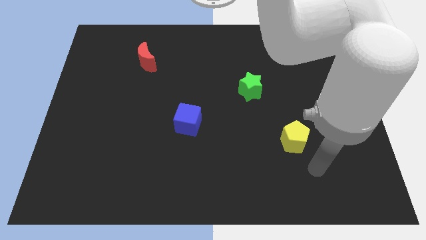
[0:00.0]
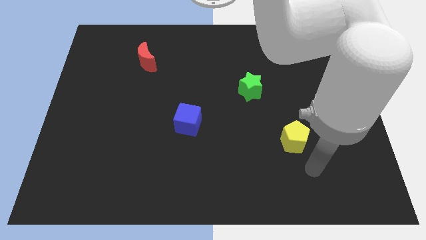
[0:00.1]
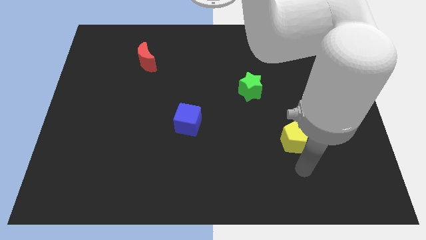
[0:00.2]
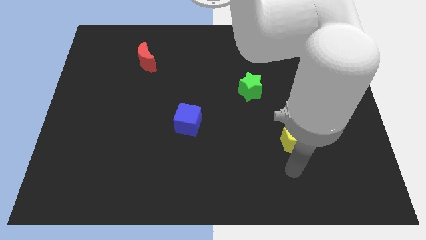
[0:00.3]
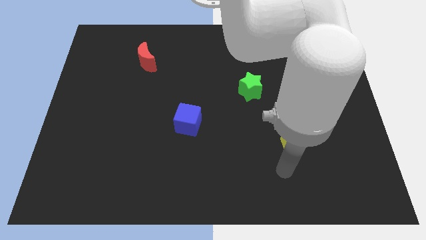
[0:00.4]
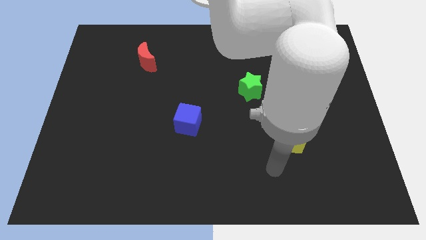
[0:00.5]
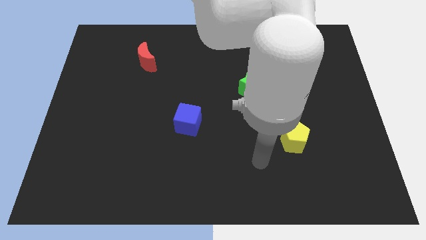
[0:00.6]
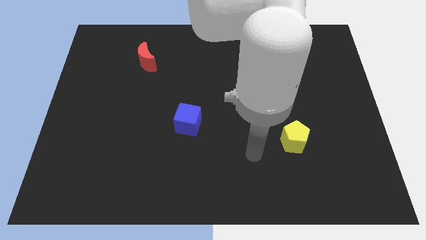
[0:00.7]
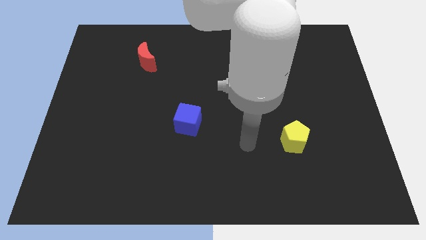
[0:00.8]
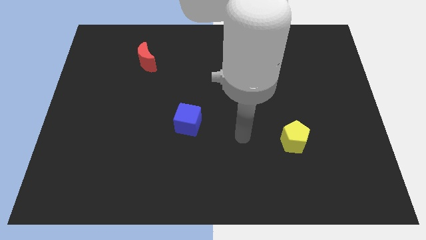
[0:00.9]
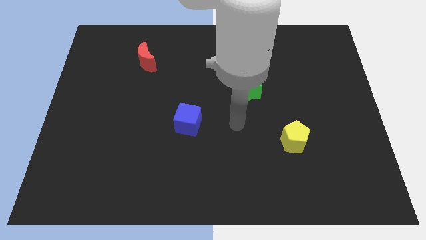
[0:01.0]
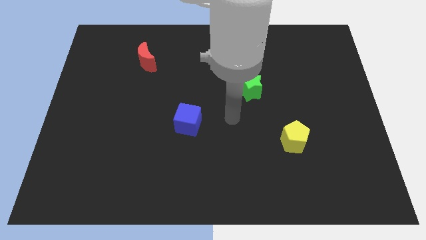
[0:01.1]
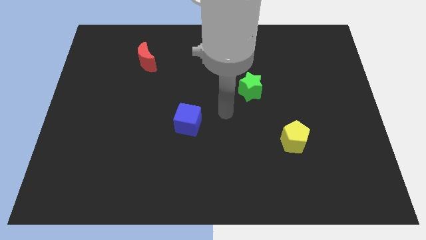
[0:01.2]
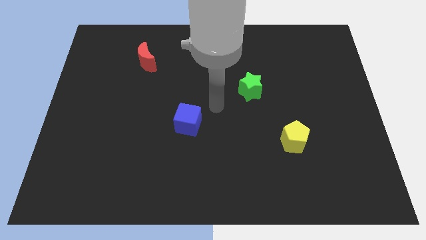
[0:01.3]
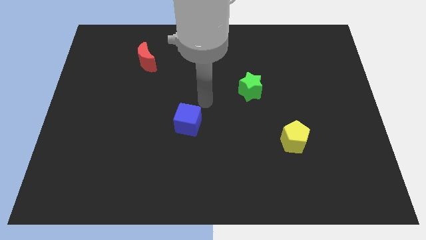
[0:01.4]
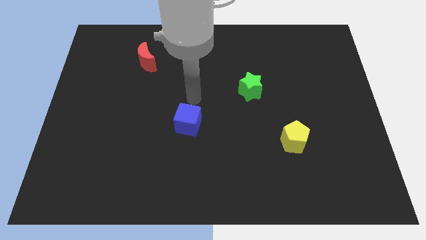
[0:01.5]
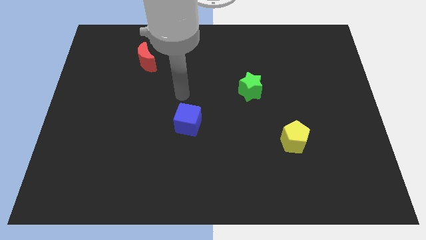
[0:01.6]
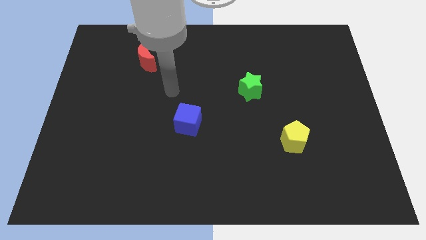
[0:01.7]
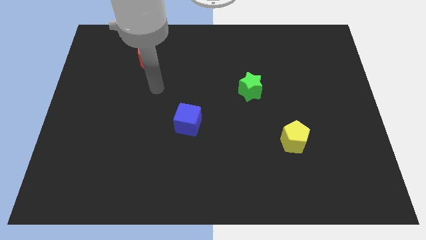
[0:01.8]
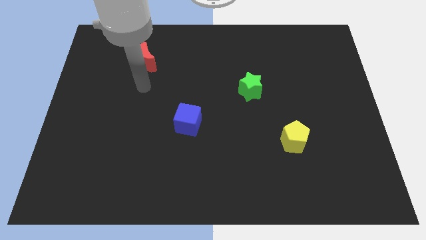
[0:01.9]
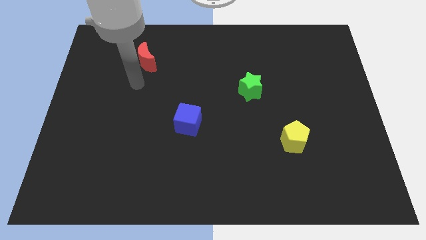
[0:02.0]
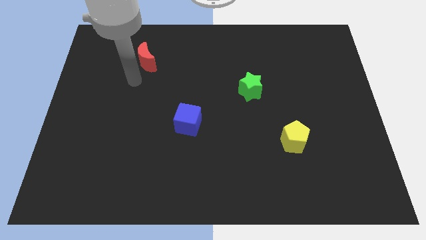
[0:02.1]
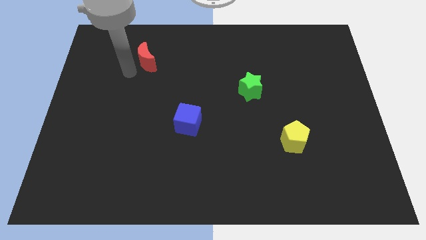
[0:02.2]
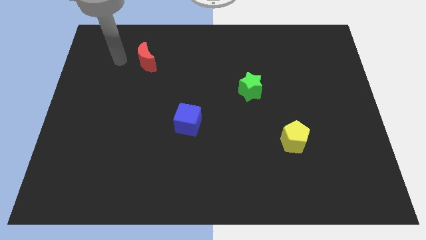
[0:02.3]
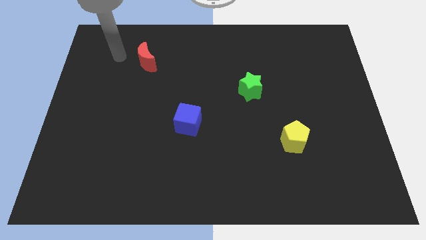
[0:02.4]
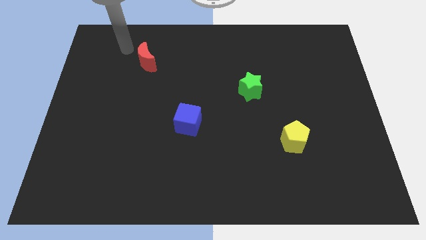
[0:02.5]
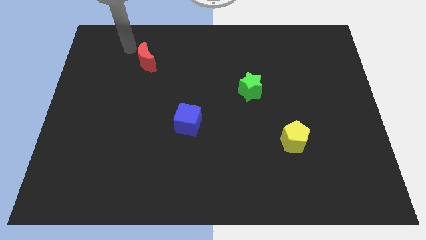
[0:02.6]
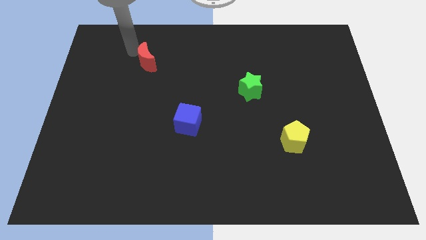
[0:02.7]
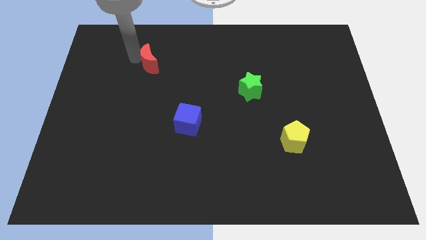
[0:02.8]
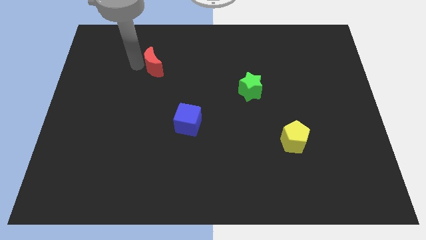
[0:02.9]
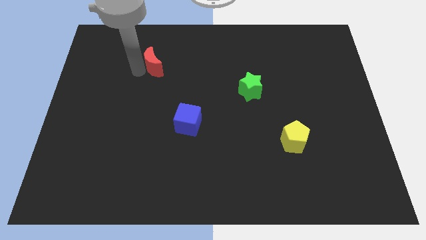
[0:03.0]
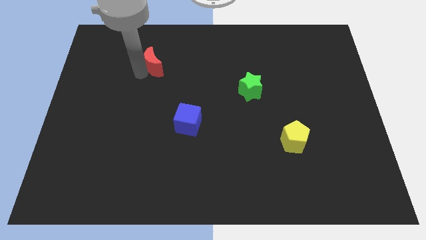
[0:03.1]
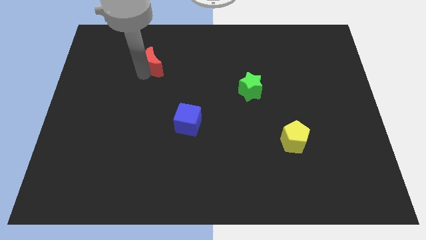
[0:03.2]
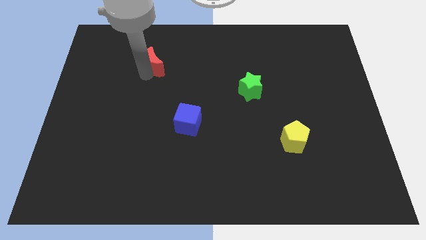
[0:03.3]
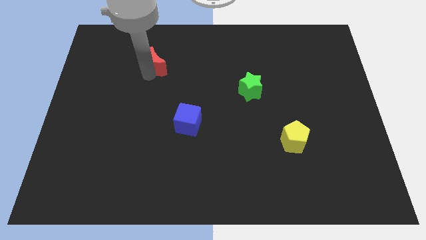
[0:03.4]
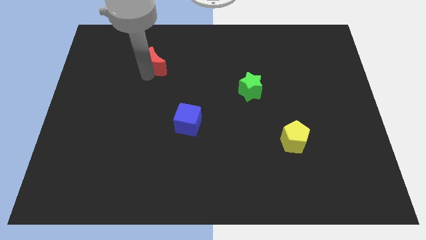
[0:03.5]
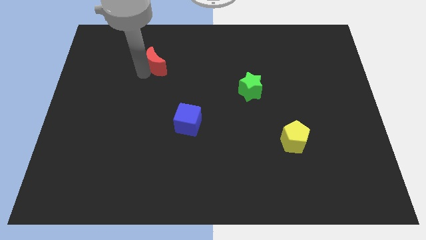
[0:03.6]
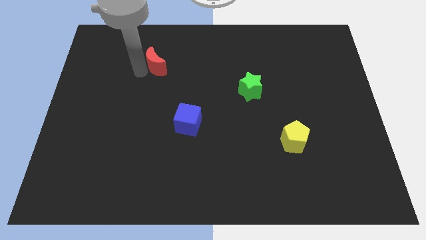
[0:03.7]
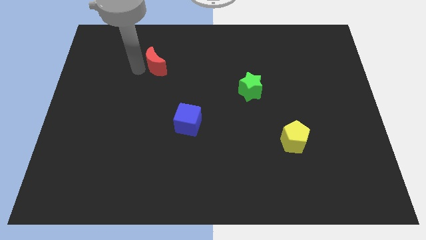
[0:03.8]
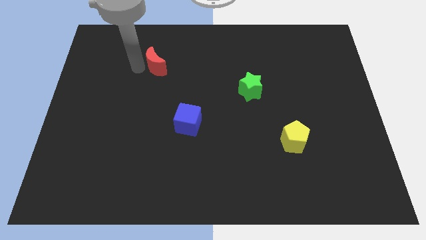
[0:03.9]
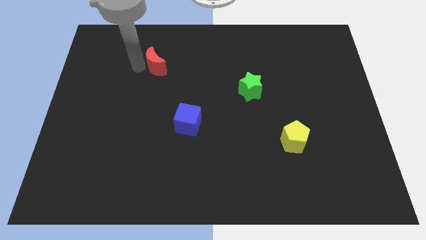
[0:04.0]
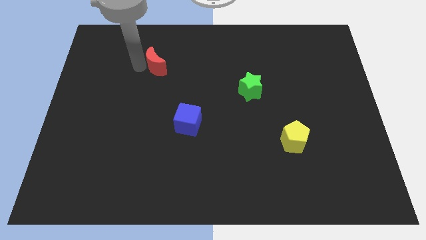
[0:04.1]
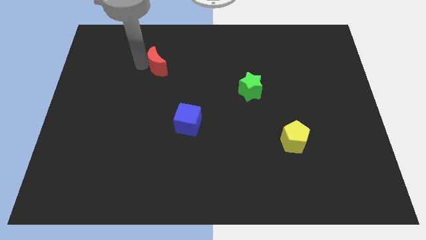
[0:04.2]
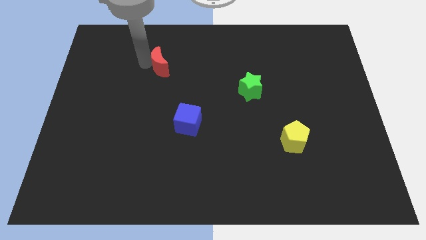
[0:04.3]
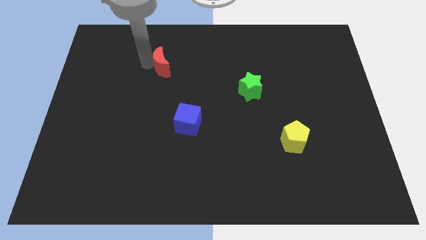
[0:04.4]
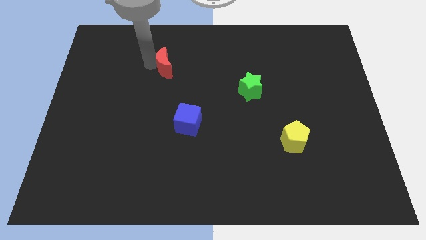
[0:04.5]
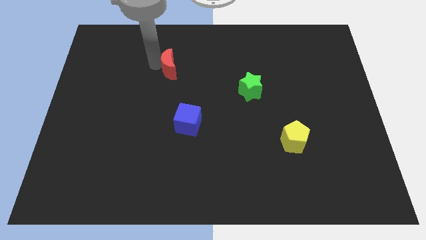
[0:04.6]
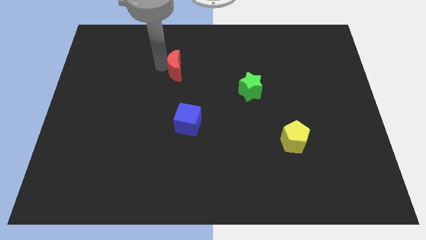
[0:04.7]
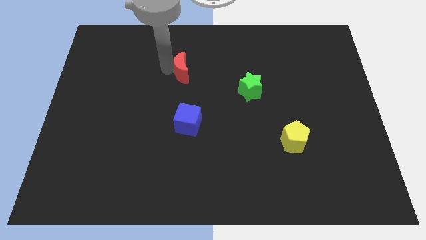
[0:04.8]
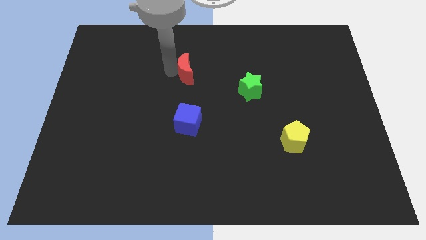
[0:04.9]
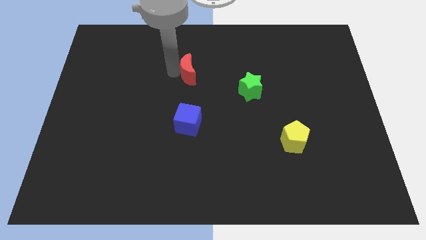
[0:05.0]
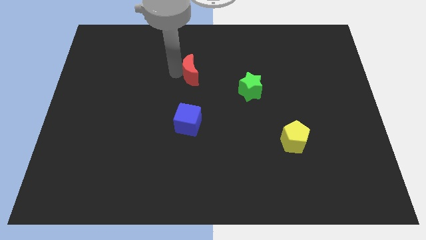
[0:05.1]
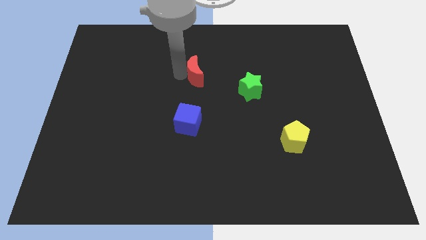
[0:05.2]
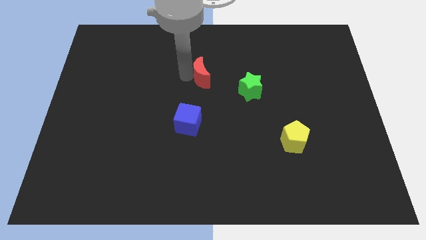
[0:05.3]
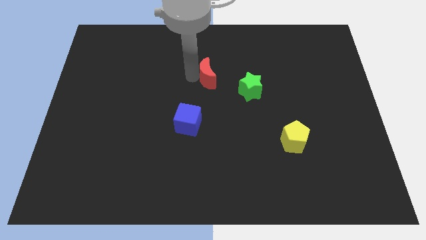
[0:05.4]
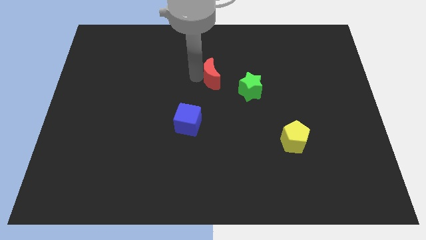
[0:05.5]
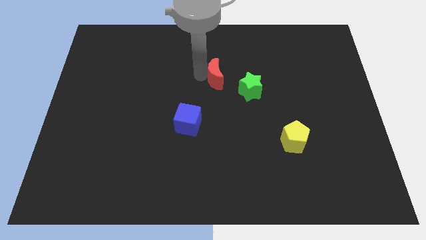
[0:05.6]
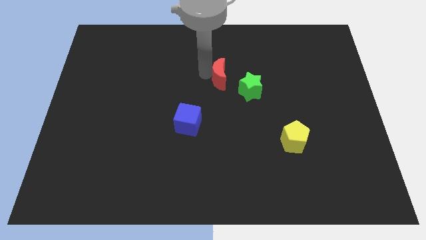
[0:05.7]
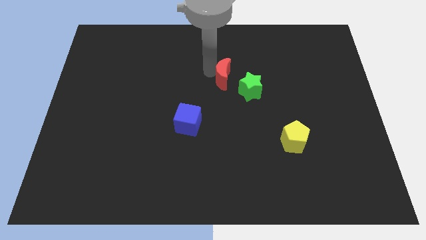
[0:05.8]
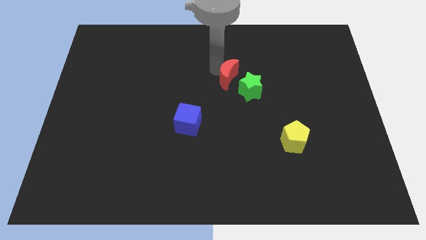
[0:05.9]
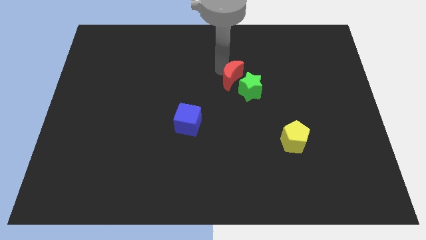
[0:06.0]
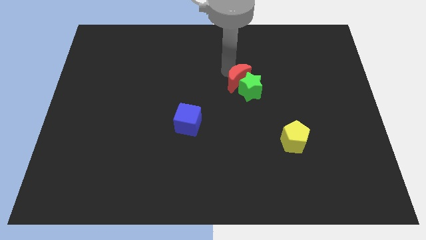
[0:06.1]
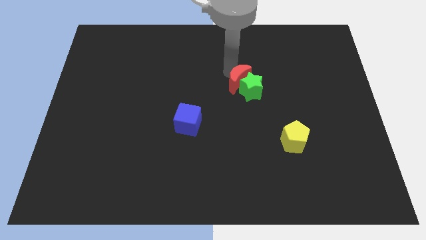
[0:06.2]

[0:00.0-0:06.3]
put the moon to the green block

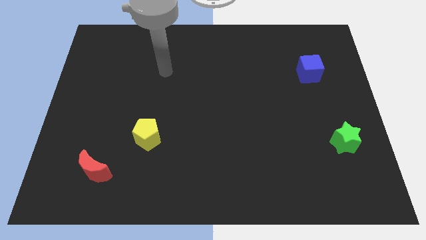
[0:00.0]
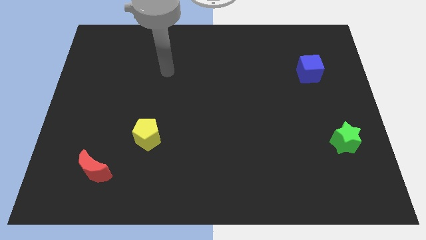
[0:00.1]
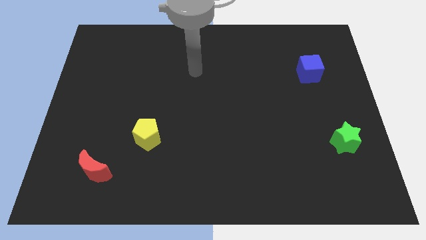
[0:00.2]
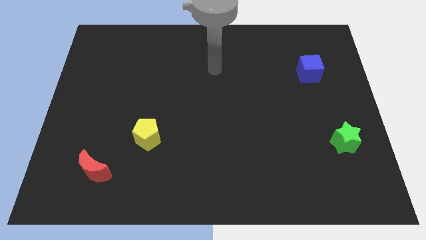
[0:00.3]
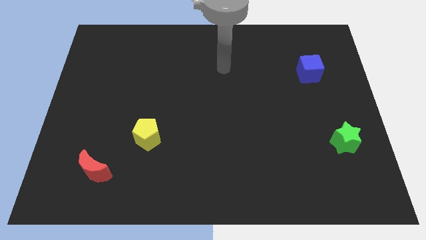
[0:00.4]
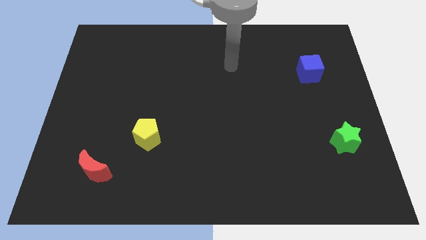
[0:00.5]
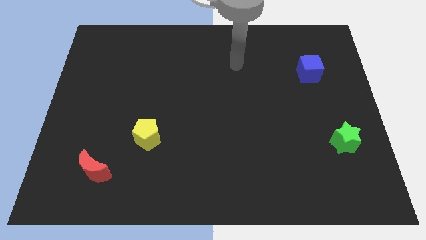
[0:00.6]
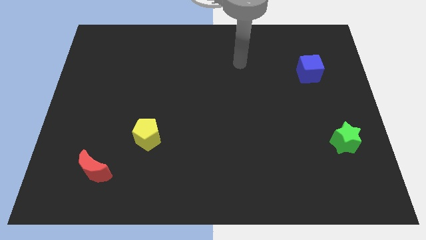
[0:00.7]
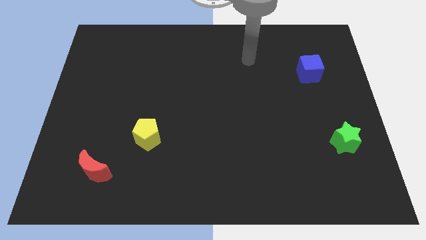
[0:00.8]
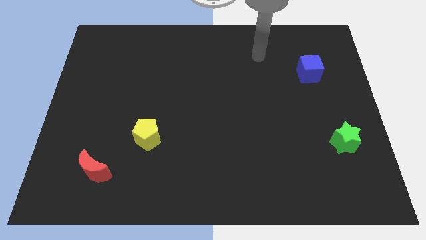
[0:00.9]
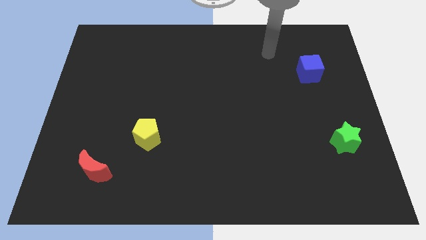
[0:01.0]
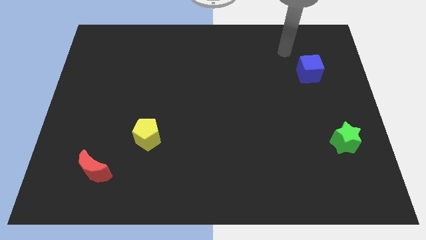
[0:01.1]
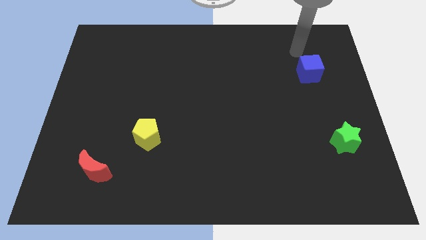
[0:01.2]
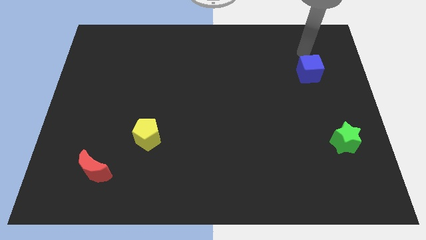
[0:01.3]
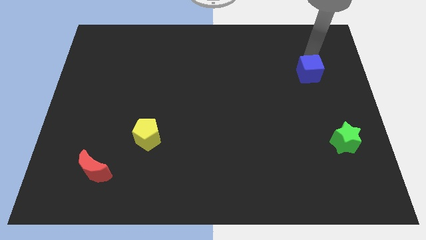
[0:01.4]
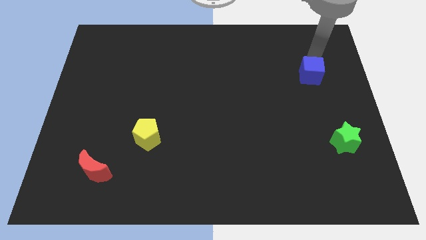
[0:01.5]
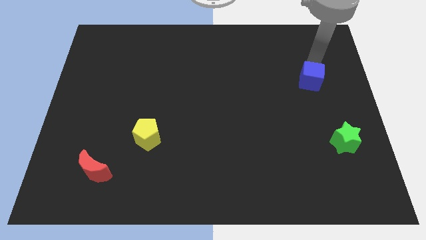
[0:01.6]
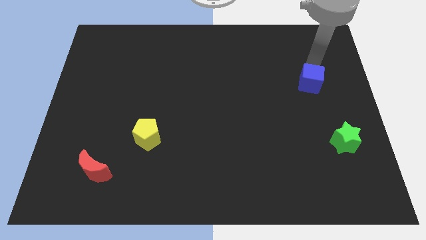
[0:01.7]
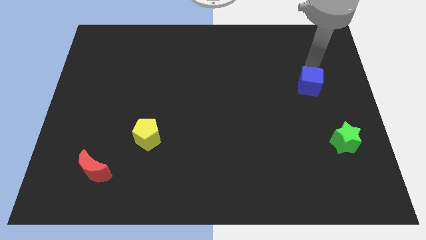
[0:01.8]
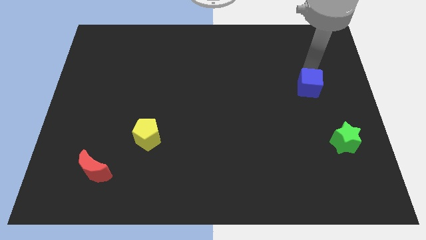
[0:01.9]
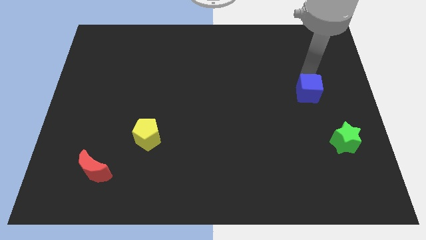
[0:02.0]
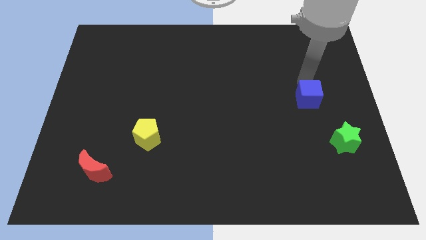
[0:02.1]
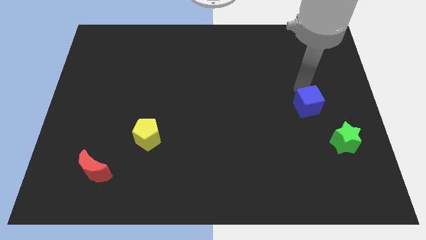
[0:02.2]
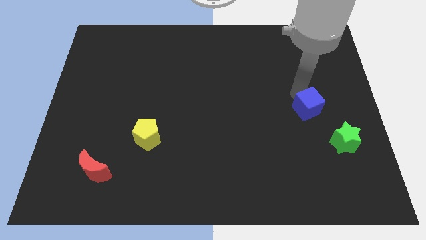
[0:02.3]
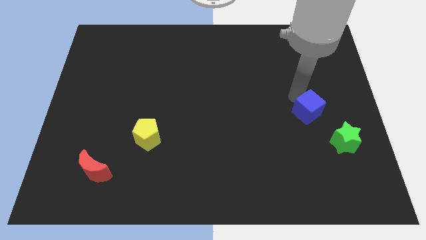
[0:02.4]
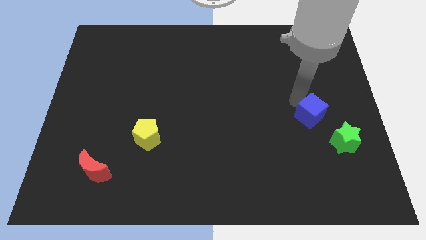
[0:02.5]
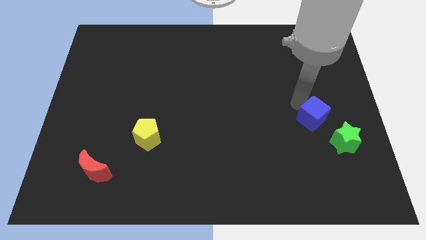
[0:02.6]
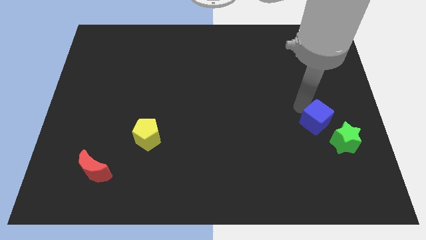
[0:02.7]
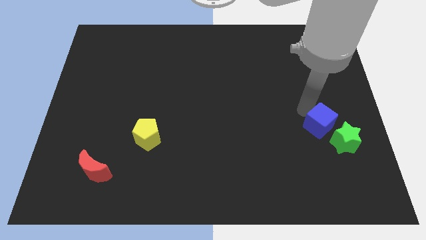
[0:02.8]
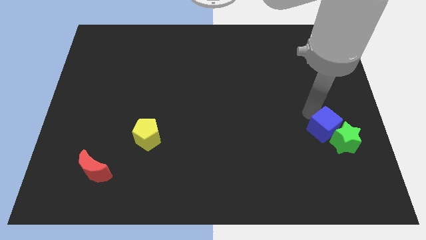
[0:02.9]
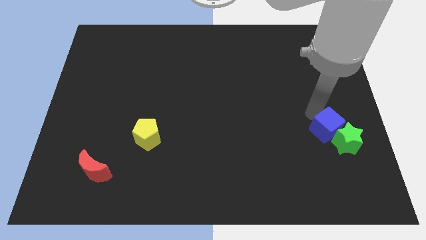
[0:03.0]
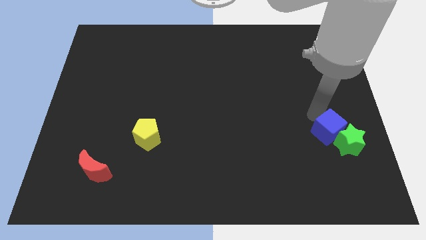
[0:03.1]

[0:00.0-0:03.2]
put the cube towards the green block
